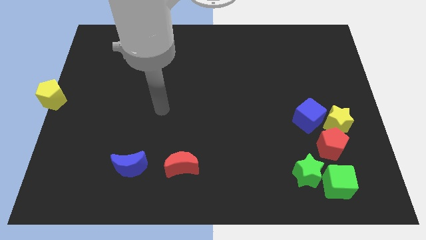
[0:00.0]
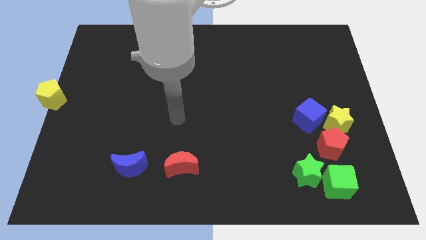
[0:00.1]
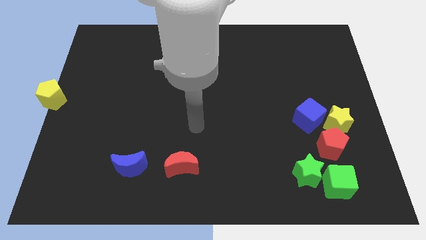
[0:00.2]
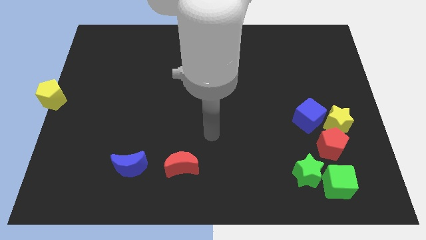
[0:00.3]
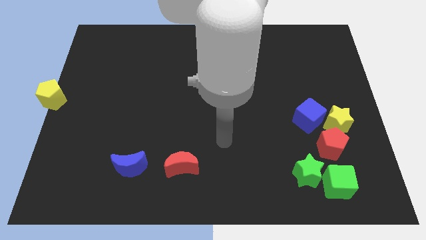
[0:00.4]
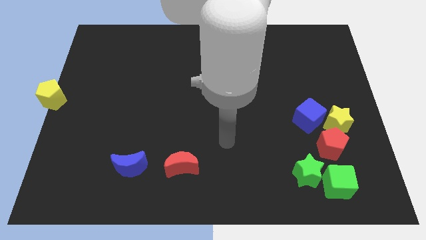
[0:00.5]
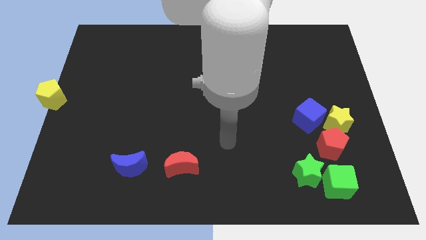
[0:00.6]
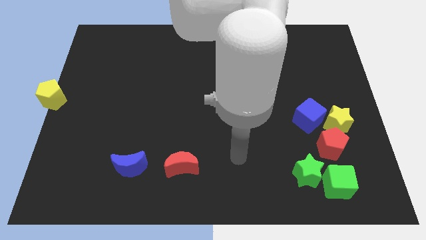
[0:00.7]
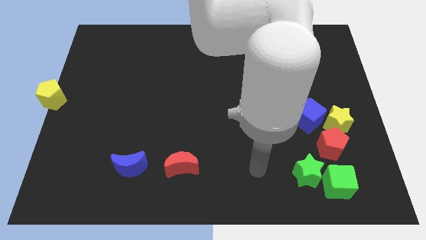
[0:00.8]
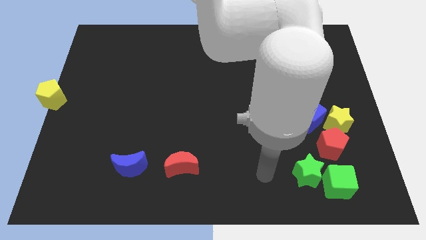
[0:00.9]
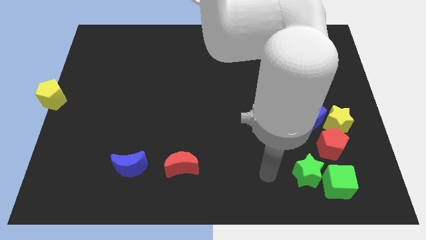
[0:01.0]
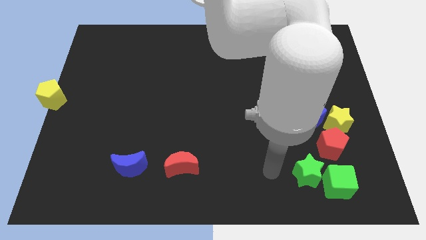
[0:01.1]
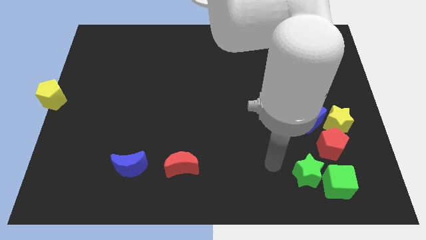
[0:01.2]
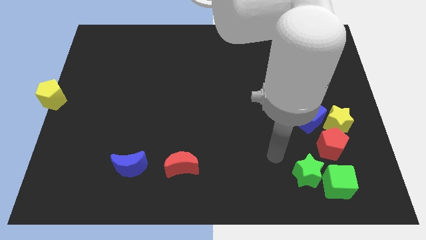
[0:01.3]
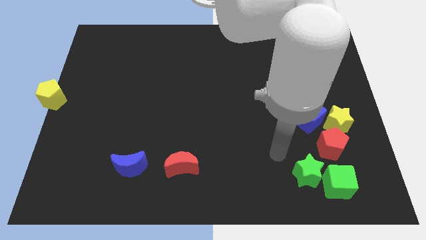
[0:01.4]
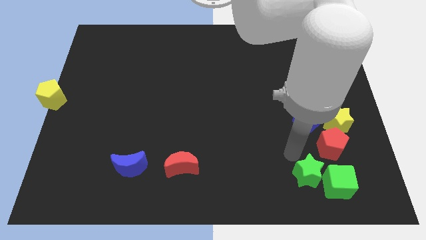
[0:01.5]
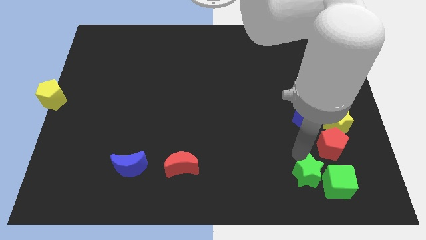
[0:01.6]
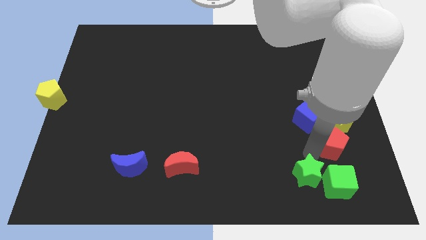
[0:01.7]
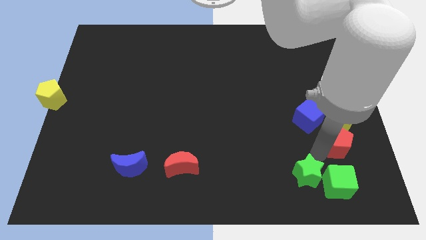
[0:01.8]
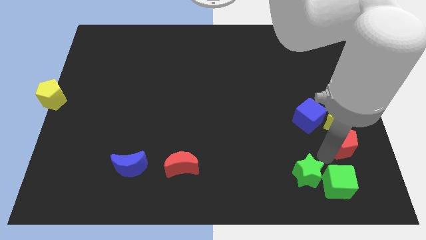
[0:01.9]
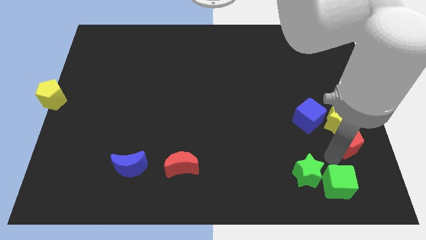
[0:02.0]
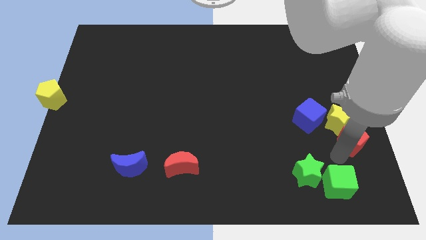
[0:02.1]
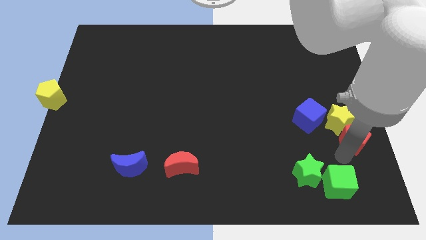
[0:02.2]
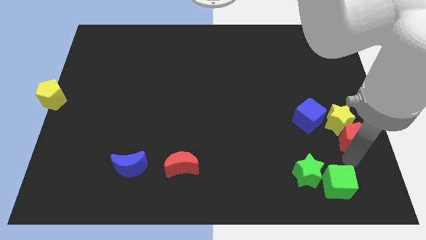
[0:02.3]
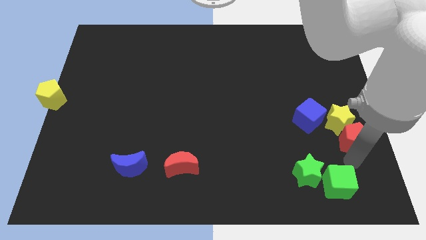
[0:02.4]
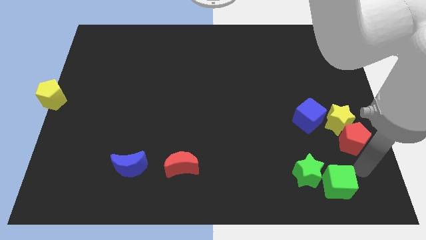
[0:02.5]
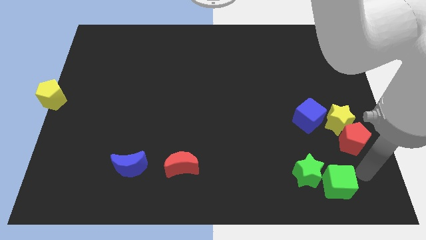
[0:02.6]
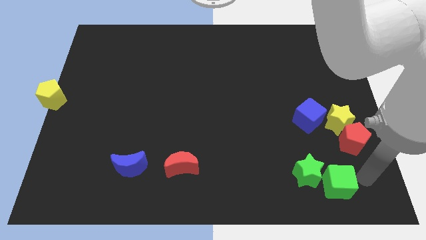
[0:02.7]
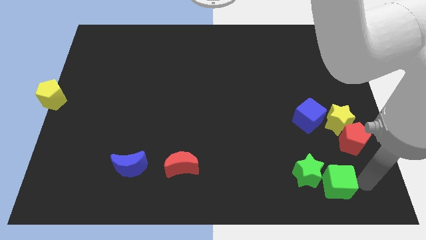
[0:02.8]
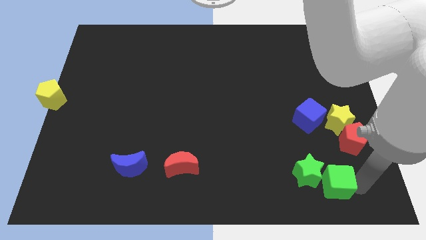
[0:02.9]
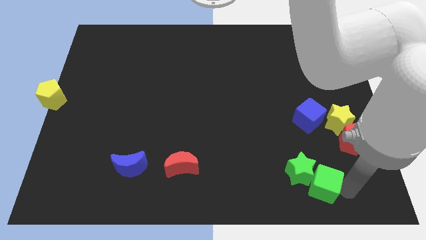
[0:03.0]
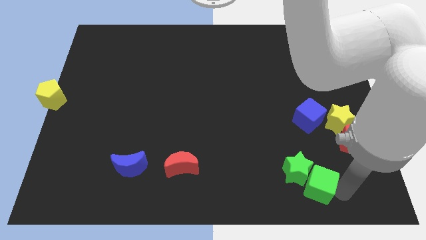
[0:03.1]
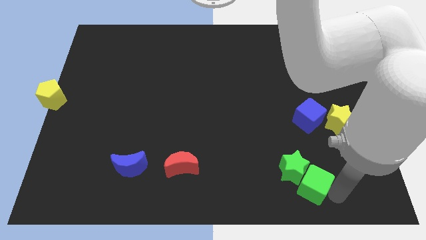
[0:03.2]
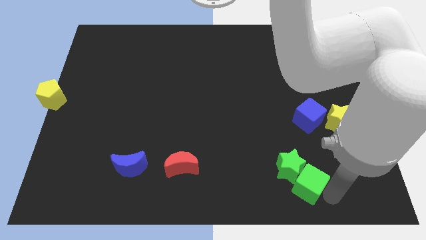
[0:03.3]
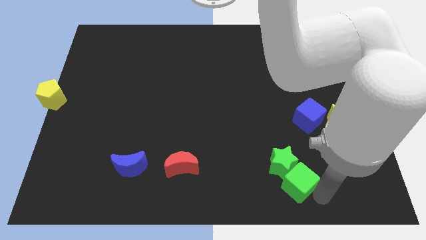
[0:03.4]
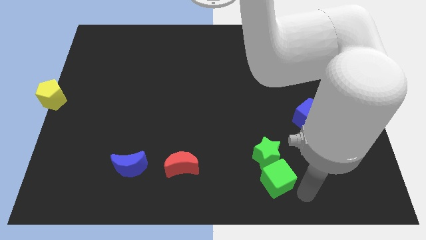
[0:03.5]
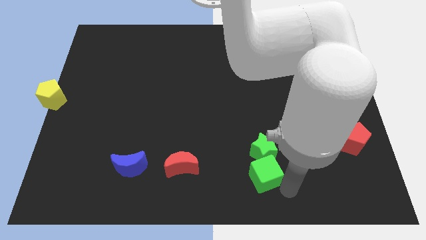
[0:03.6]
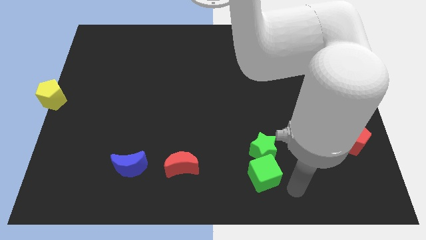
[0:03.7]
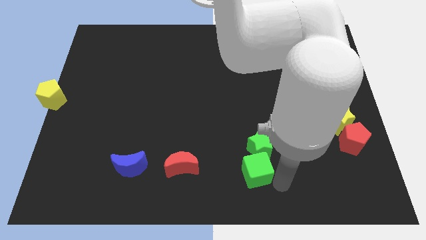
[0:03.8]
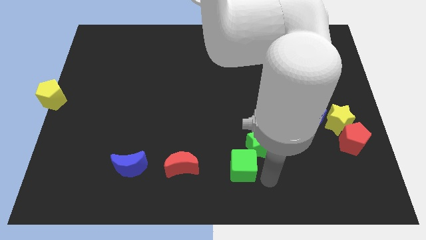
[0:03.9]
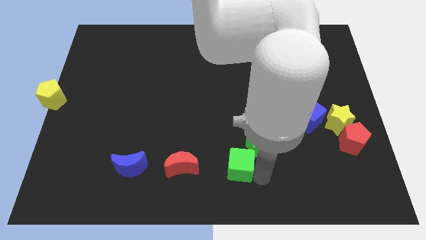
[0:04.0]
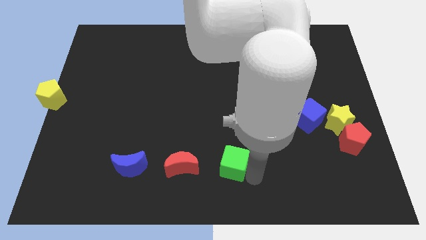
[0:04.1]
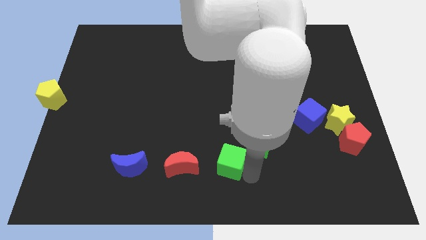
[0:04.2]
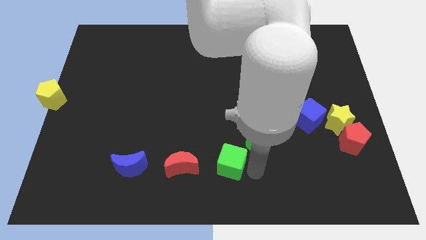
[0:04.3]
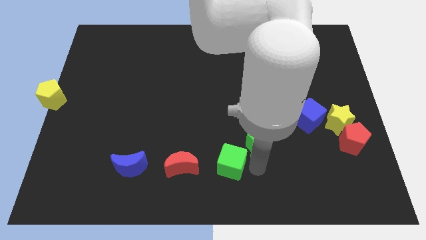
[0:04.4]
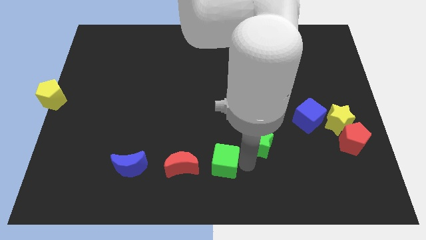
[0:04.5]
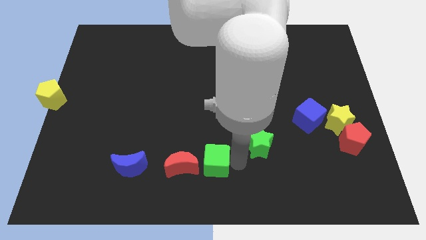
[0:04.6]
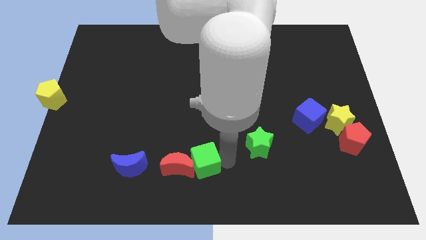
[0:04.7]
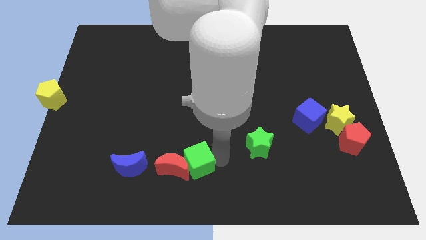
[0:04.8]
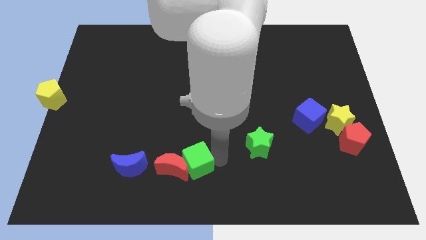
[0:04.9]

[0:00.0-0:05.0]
put the green cube close to the red moon

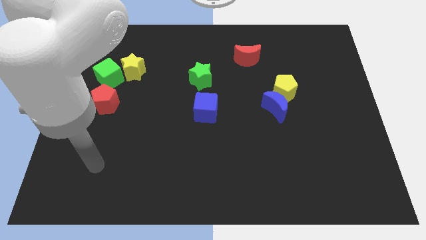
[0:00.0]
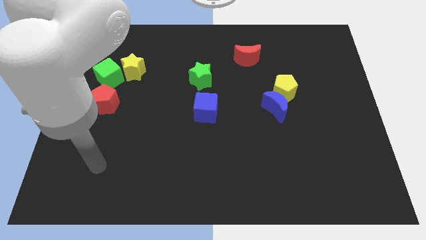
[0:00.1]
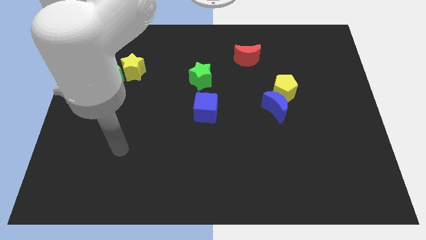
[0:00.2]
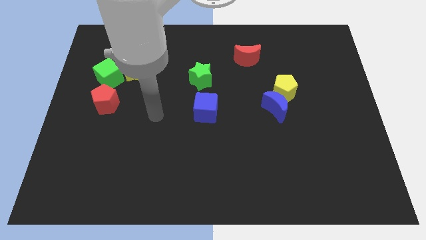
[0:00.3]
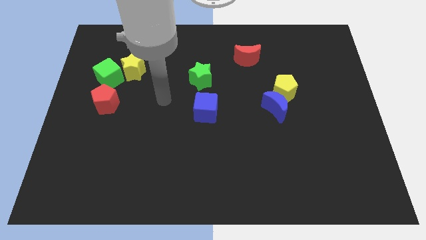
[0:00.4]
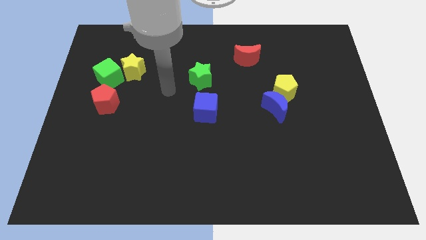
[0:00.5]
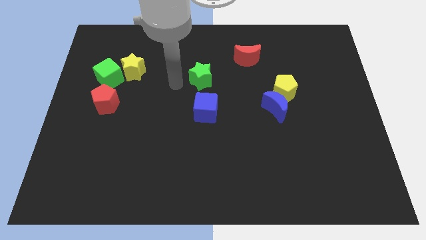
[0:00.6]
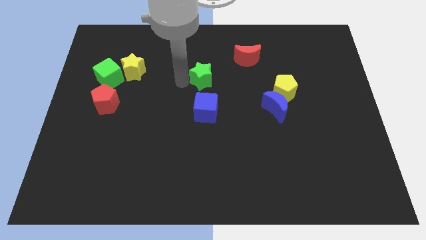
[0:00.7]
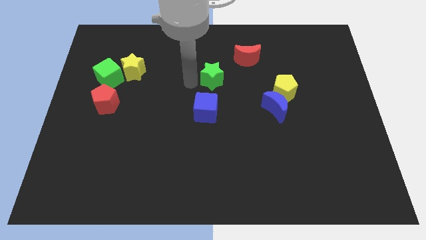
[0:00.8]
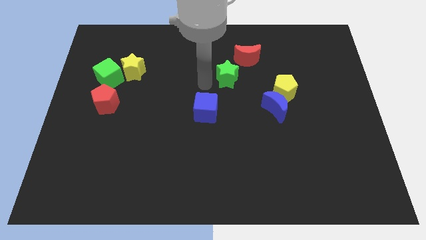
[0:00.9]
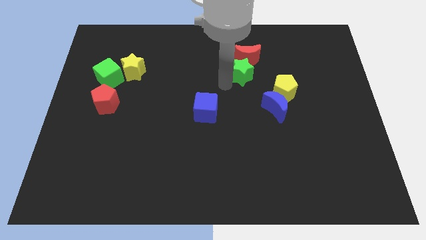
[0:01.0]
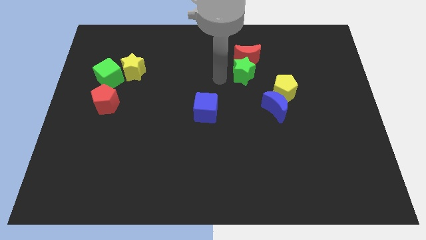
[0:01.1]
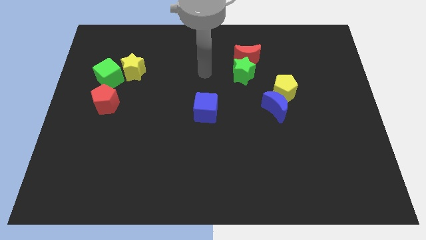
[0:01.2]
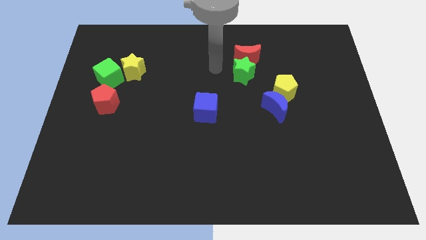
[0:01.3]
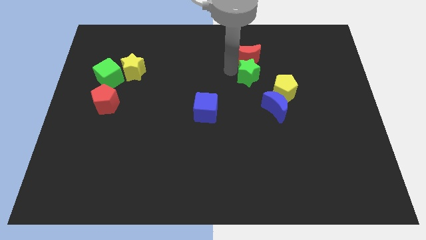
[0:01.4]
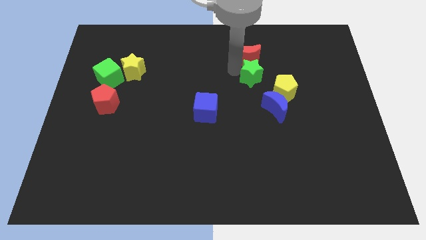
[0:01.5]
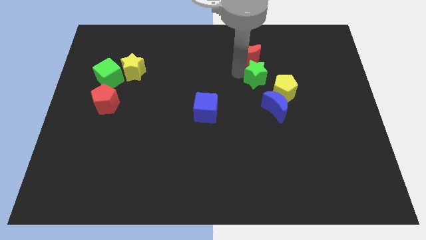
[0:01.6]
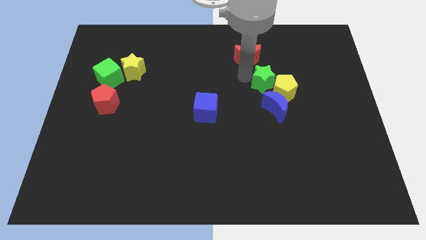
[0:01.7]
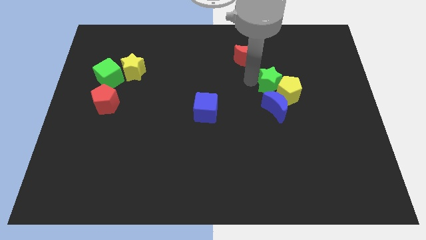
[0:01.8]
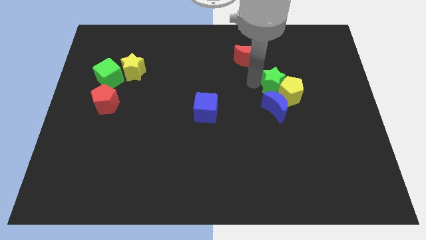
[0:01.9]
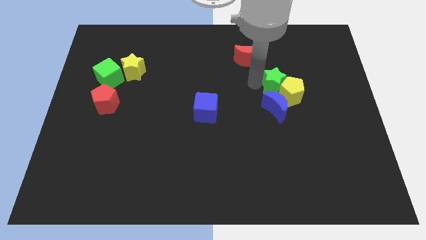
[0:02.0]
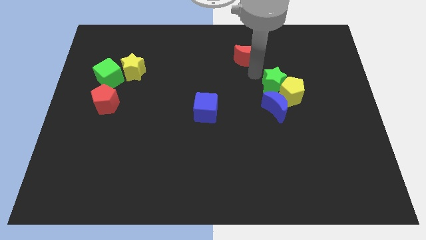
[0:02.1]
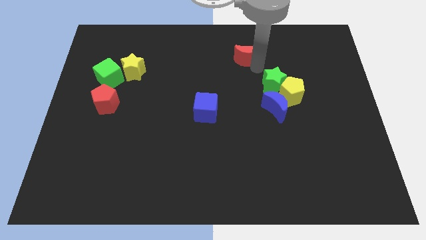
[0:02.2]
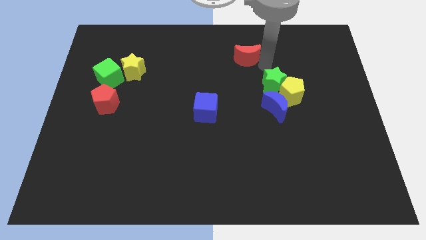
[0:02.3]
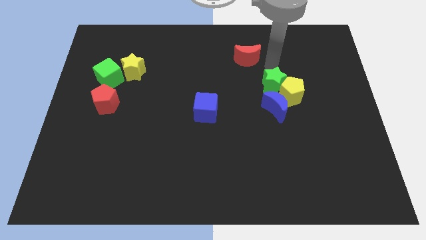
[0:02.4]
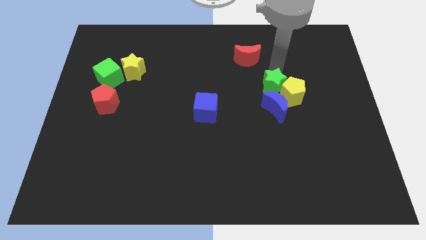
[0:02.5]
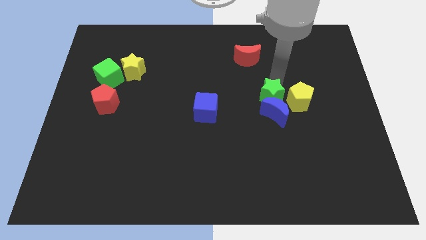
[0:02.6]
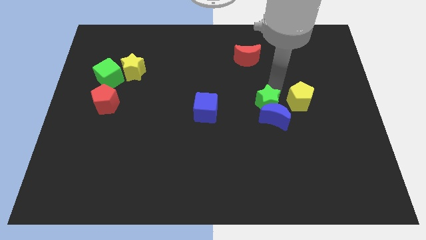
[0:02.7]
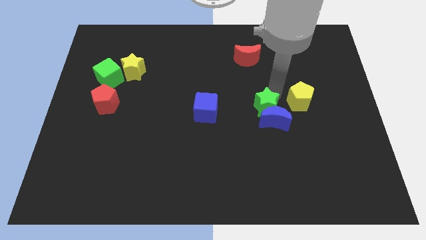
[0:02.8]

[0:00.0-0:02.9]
slide the green star close to the blue moon
